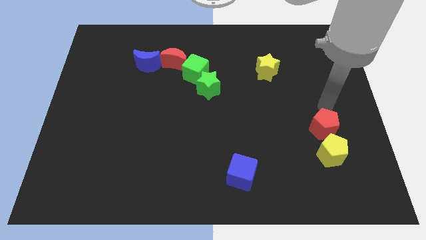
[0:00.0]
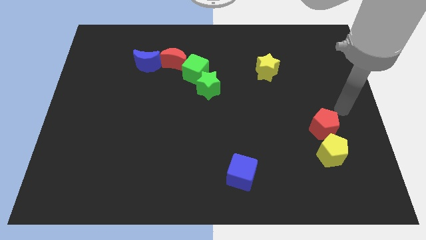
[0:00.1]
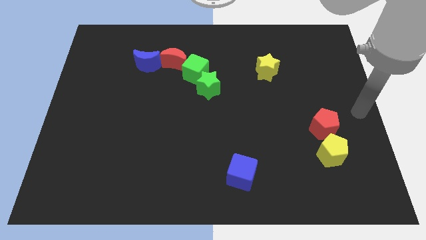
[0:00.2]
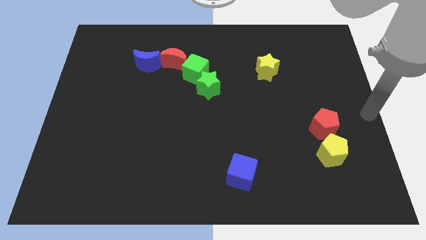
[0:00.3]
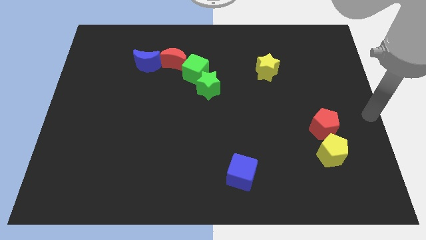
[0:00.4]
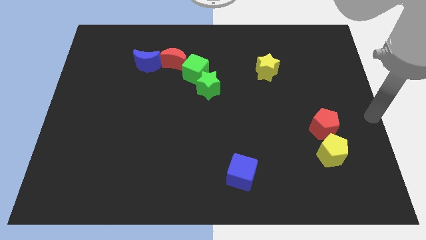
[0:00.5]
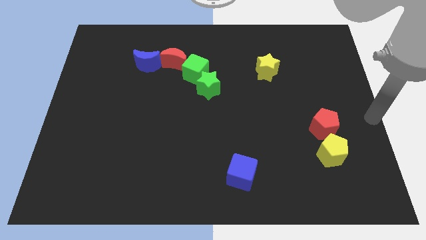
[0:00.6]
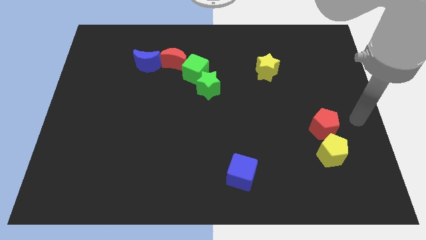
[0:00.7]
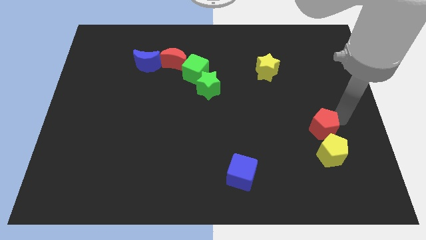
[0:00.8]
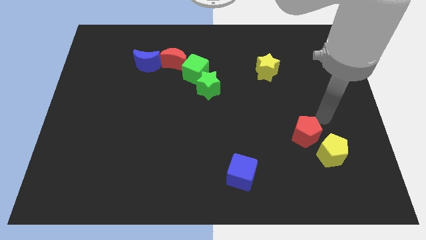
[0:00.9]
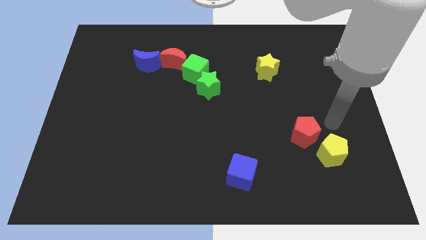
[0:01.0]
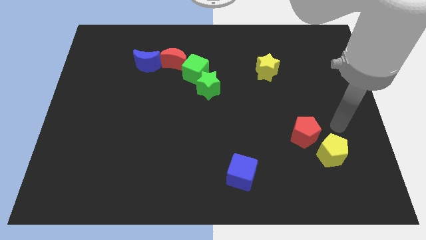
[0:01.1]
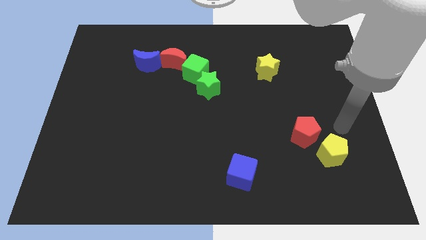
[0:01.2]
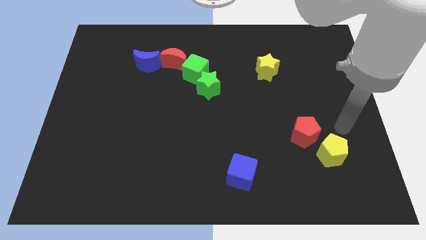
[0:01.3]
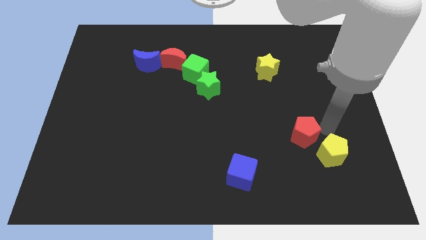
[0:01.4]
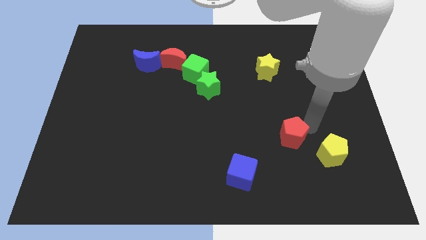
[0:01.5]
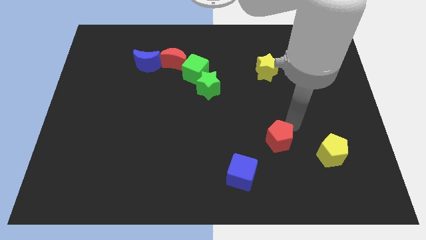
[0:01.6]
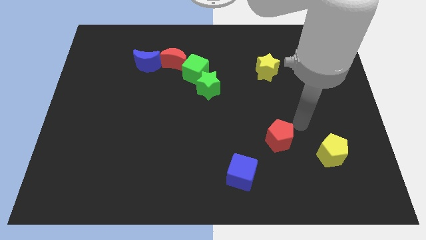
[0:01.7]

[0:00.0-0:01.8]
push the red pentagon to the top right of the blue cube

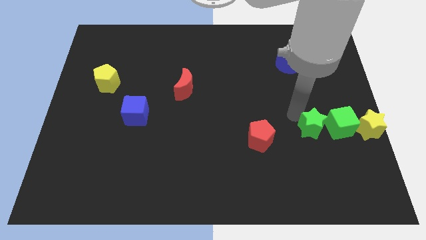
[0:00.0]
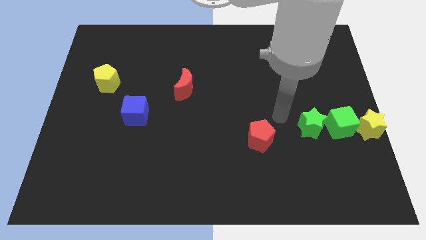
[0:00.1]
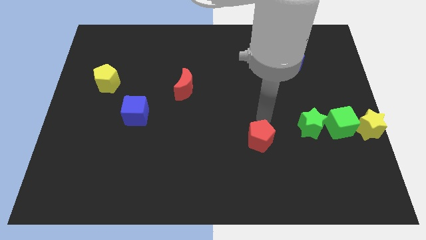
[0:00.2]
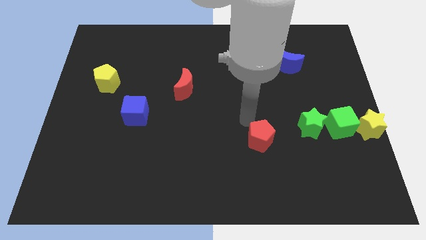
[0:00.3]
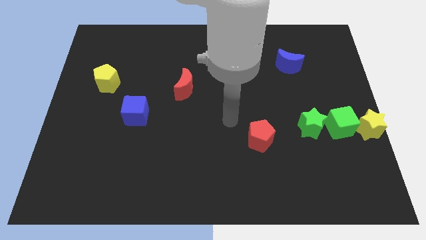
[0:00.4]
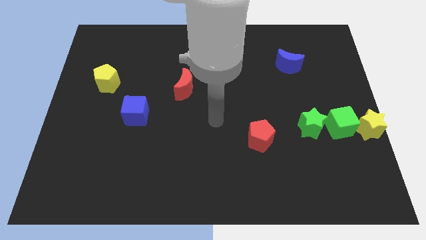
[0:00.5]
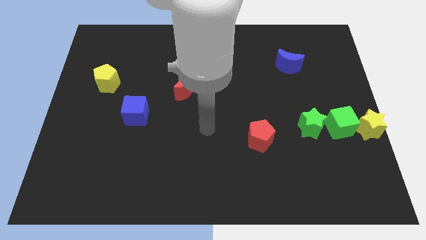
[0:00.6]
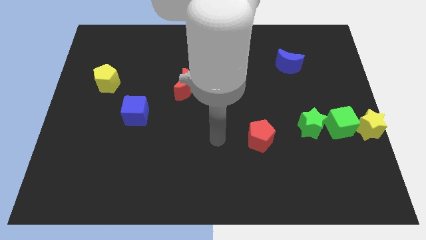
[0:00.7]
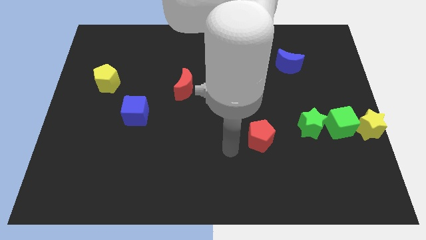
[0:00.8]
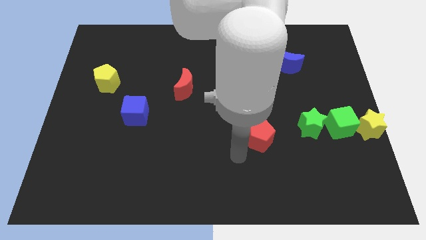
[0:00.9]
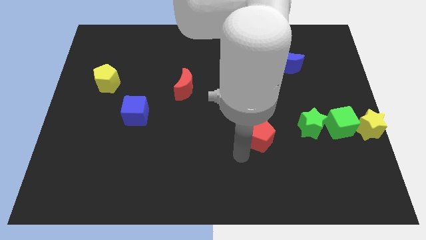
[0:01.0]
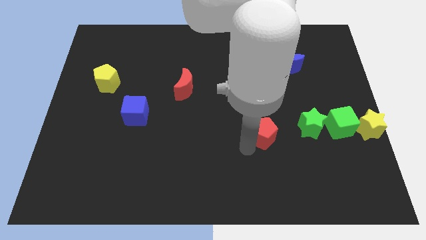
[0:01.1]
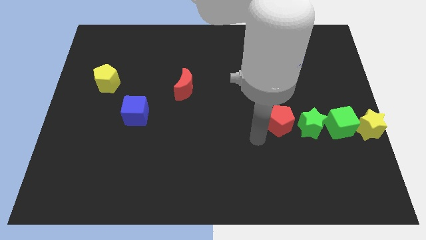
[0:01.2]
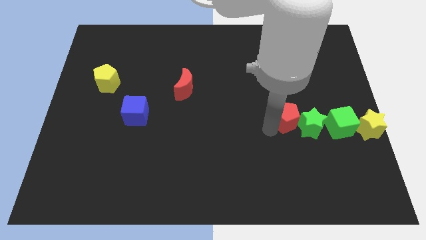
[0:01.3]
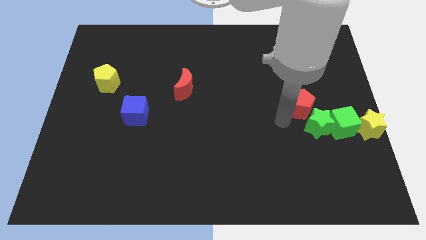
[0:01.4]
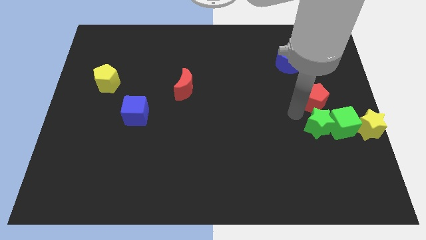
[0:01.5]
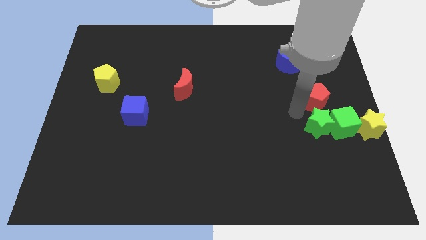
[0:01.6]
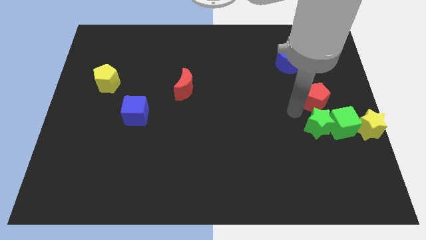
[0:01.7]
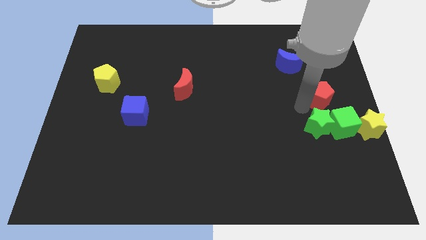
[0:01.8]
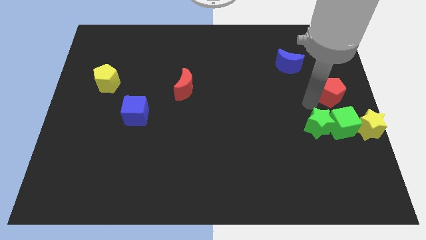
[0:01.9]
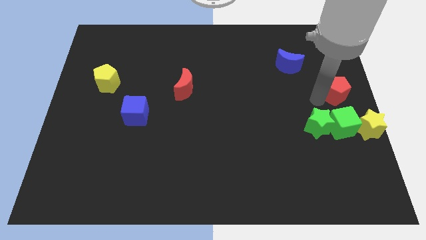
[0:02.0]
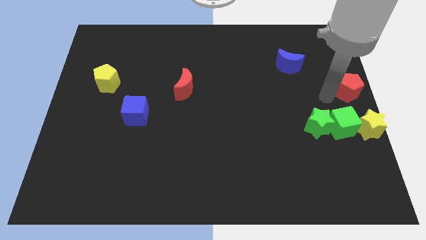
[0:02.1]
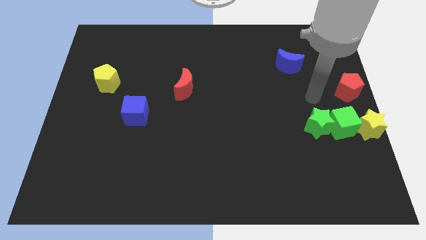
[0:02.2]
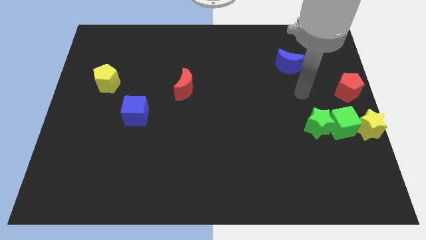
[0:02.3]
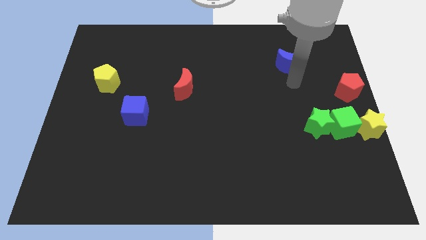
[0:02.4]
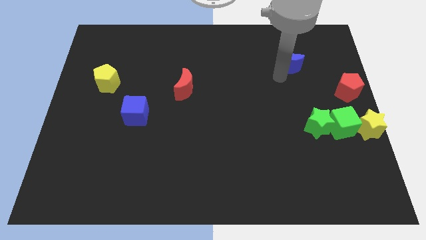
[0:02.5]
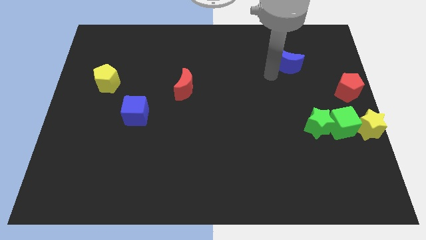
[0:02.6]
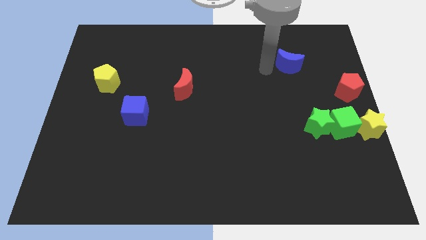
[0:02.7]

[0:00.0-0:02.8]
move the red pentagon to the top of the green cube

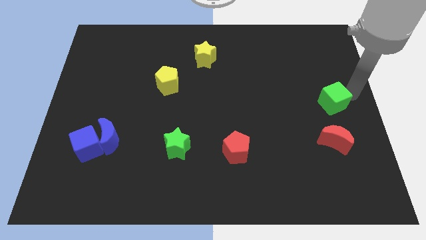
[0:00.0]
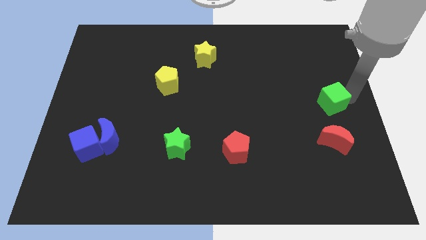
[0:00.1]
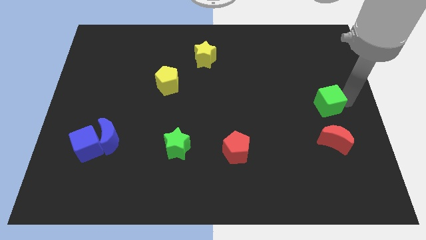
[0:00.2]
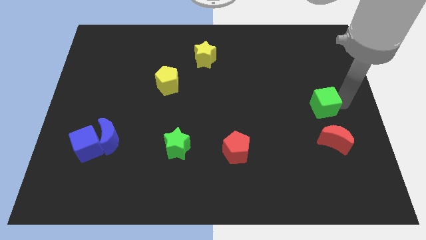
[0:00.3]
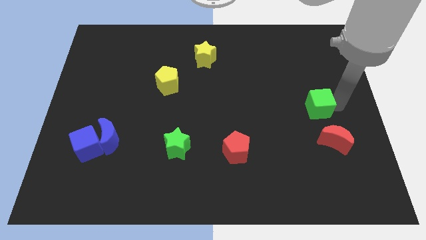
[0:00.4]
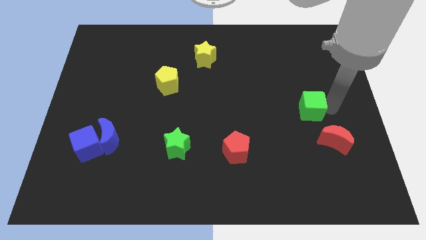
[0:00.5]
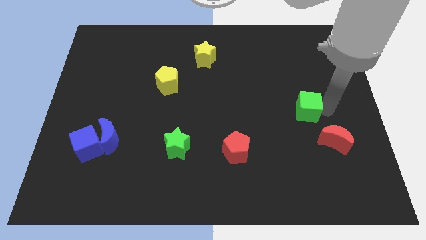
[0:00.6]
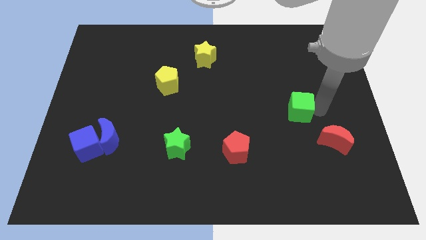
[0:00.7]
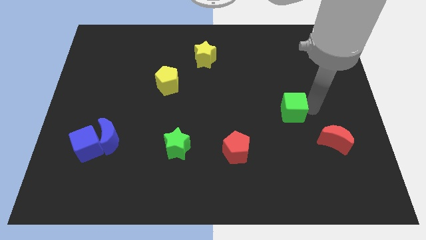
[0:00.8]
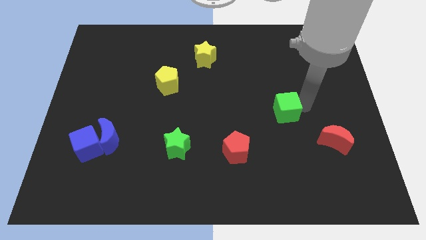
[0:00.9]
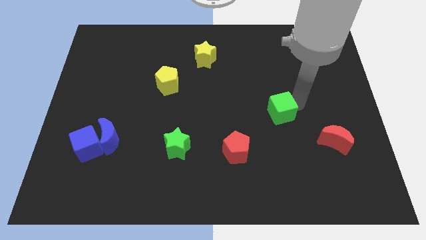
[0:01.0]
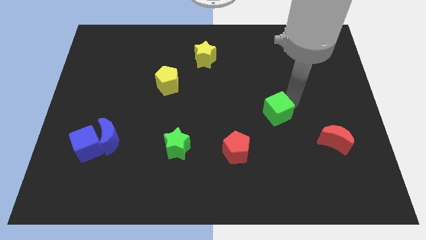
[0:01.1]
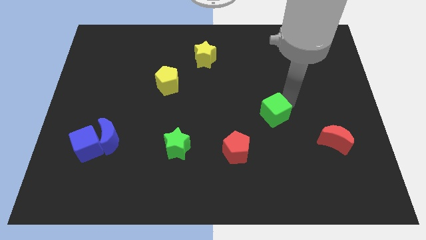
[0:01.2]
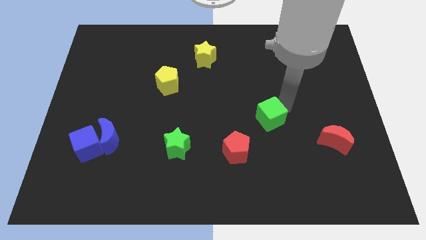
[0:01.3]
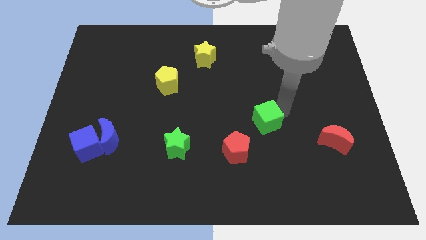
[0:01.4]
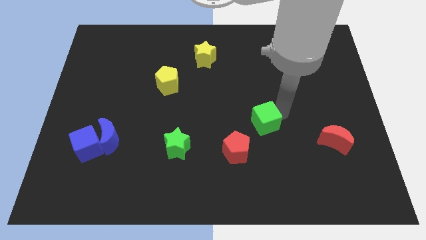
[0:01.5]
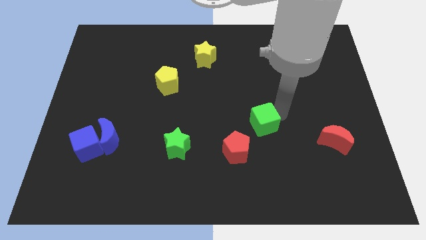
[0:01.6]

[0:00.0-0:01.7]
move the green cube towards the red pentagon on the bottom right of the board

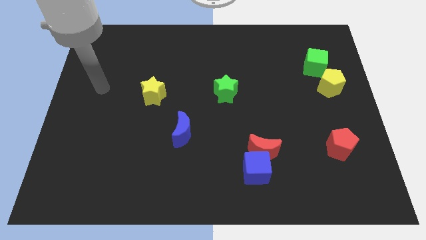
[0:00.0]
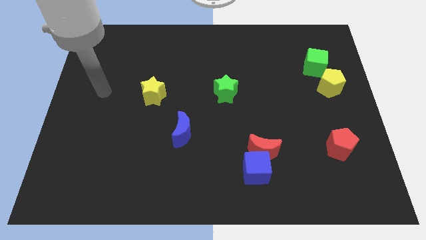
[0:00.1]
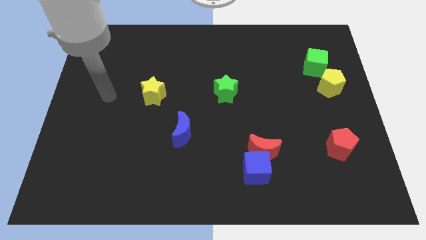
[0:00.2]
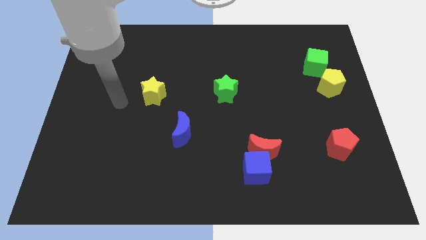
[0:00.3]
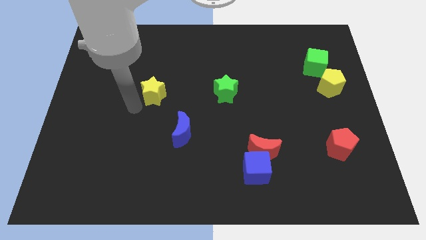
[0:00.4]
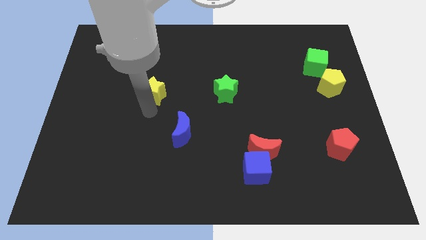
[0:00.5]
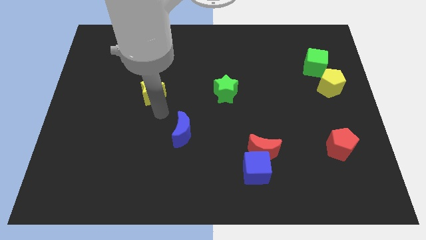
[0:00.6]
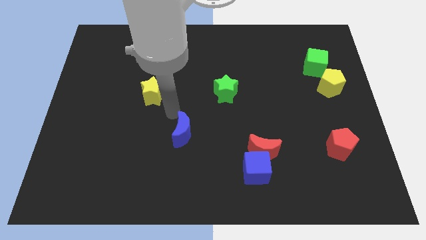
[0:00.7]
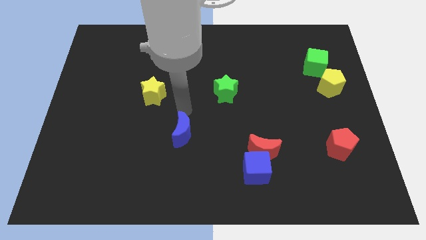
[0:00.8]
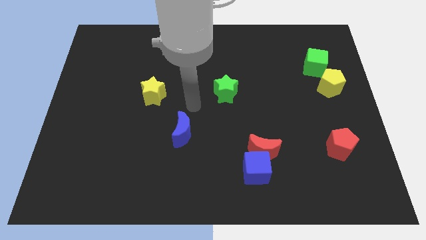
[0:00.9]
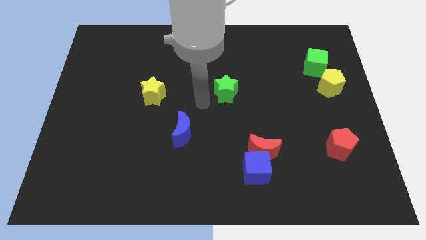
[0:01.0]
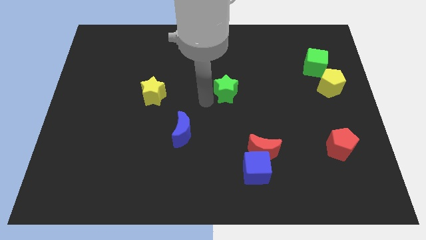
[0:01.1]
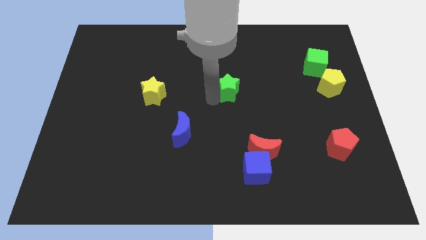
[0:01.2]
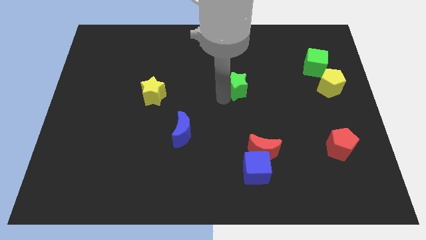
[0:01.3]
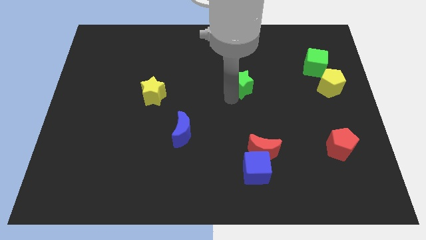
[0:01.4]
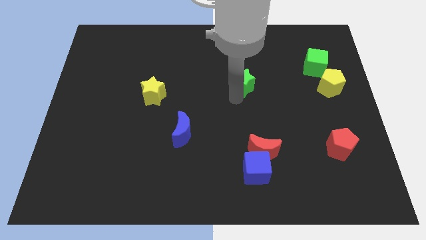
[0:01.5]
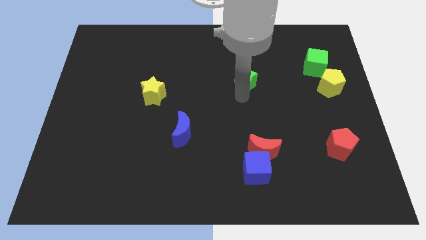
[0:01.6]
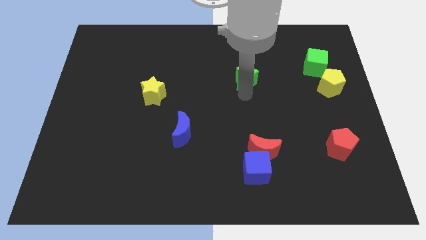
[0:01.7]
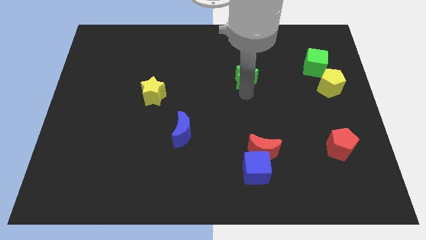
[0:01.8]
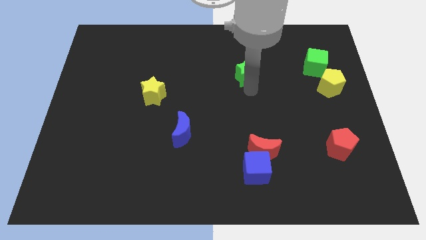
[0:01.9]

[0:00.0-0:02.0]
place your arm below green star

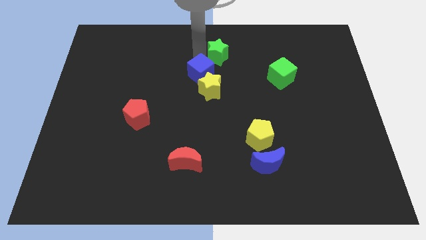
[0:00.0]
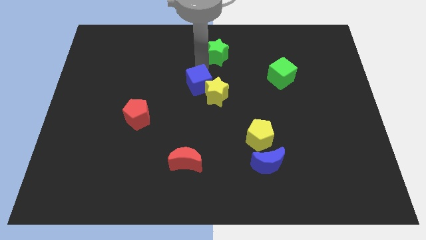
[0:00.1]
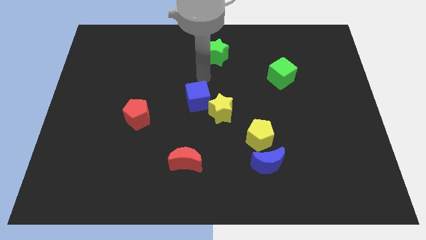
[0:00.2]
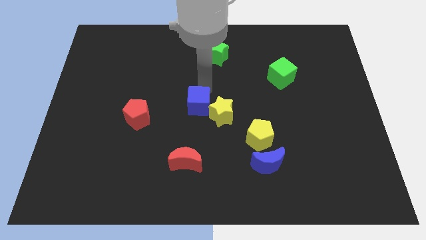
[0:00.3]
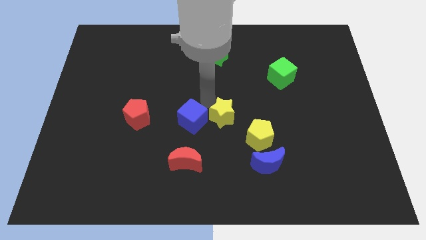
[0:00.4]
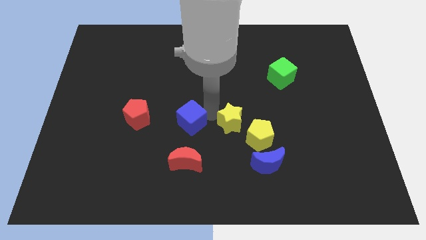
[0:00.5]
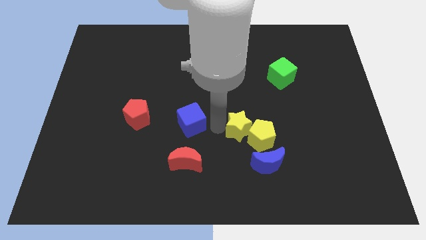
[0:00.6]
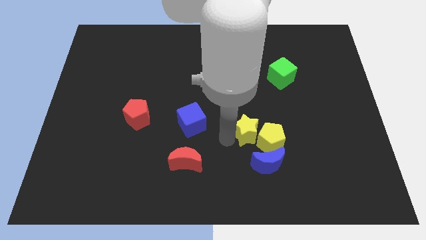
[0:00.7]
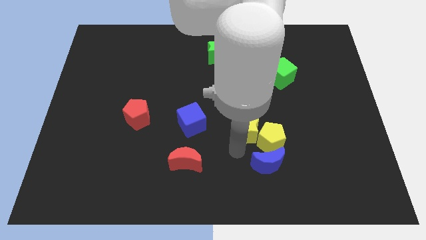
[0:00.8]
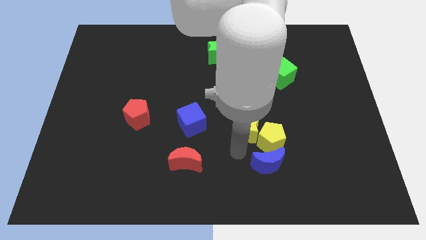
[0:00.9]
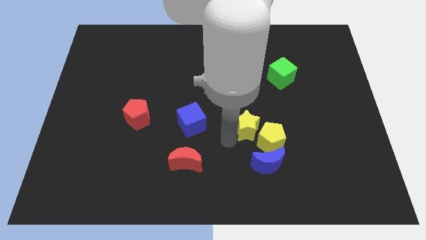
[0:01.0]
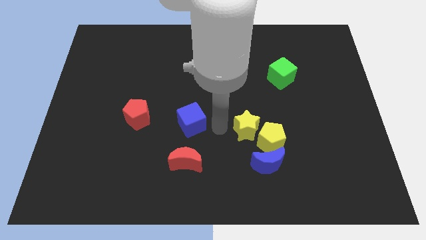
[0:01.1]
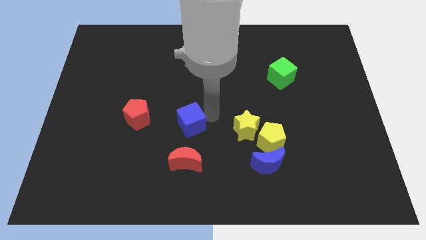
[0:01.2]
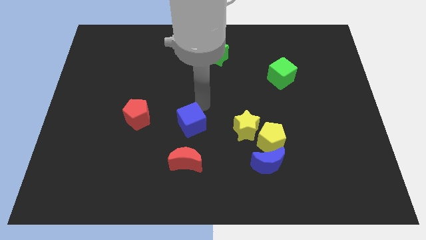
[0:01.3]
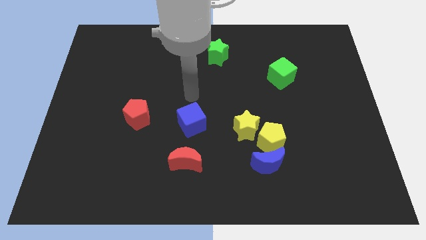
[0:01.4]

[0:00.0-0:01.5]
separate the blue cube and yellow star
